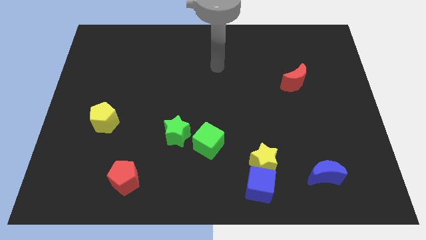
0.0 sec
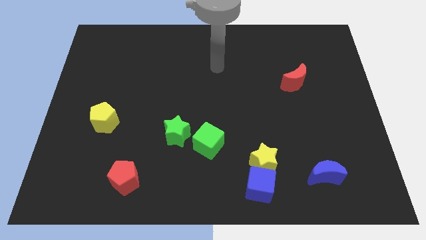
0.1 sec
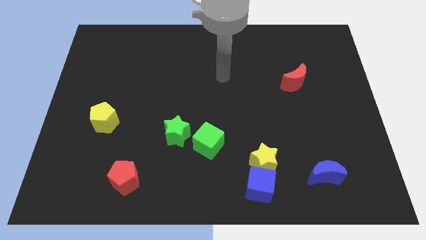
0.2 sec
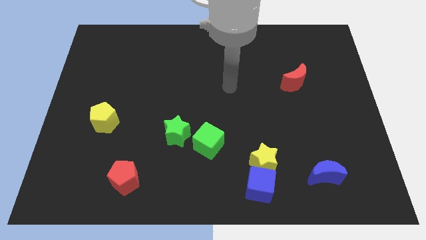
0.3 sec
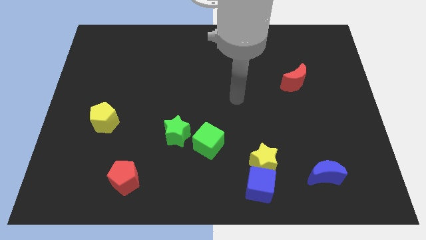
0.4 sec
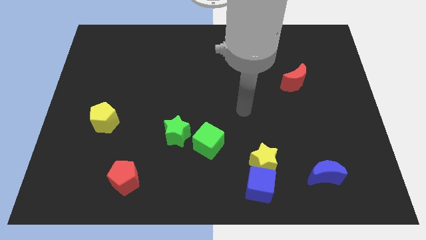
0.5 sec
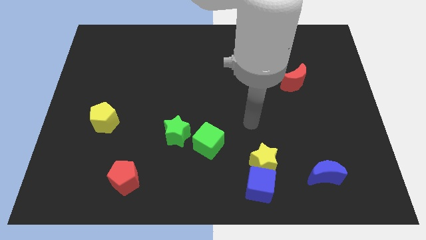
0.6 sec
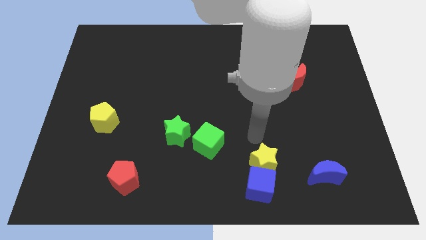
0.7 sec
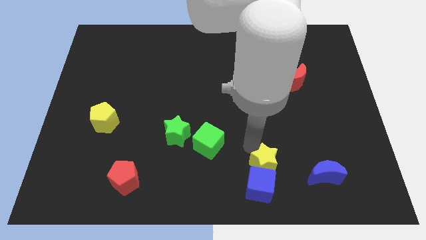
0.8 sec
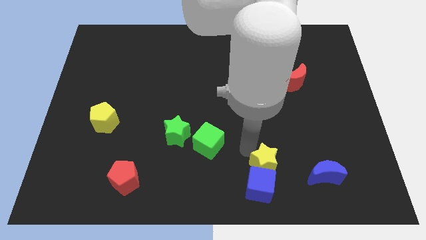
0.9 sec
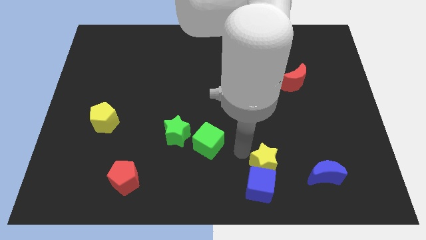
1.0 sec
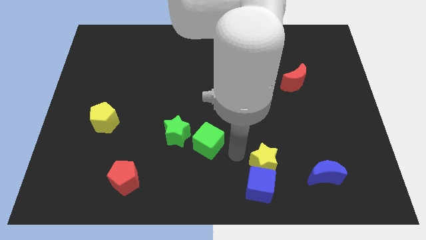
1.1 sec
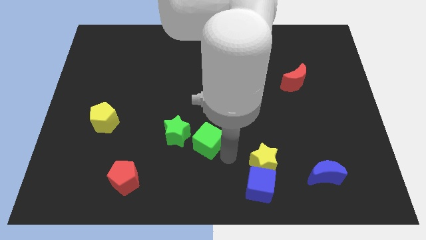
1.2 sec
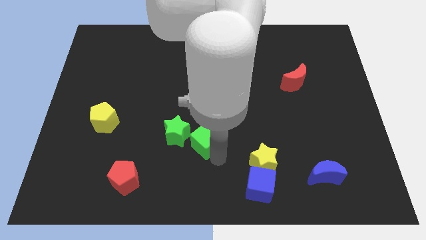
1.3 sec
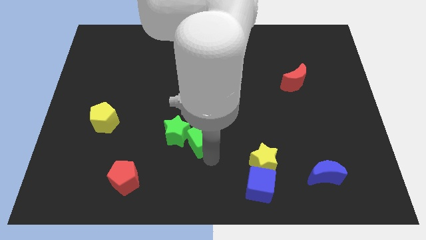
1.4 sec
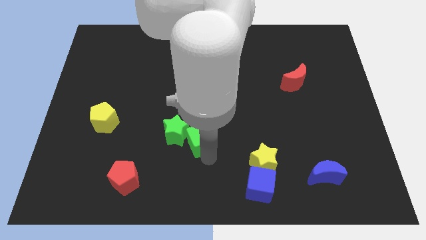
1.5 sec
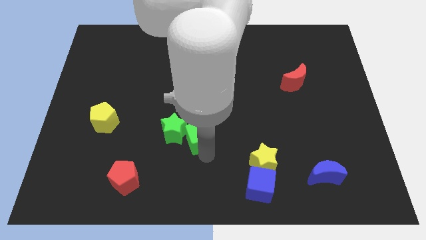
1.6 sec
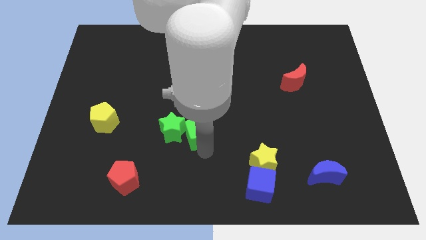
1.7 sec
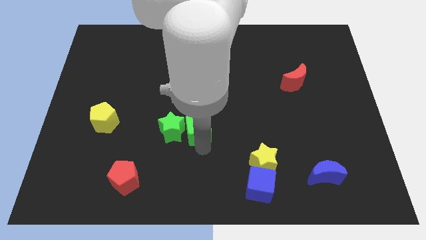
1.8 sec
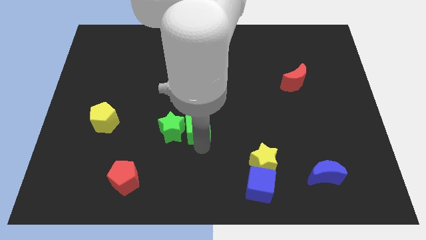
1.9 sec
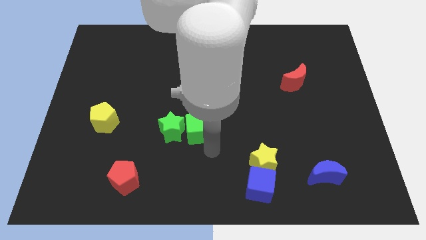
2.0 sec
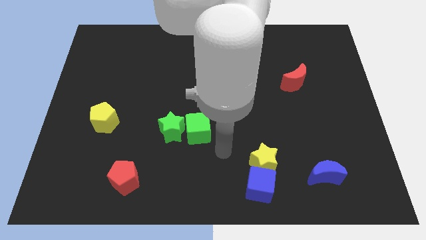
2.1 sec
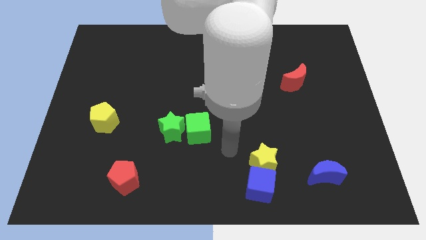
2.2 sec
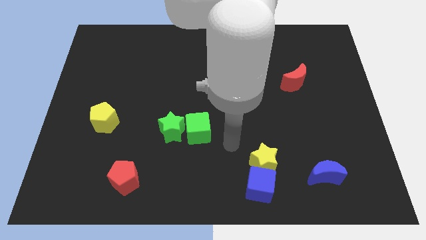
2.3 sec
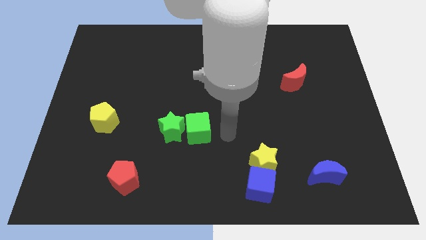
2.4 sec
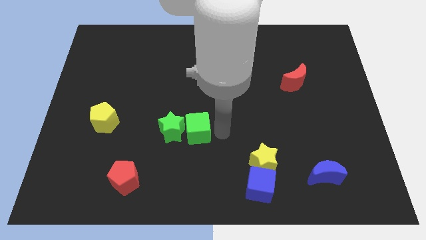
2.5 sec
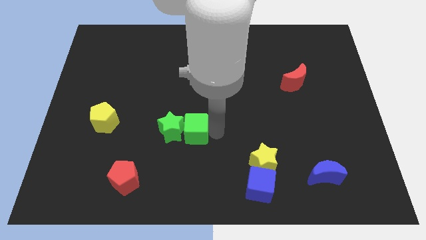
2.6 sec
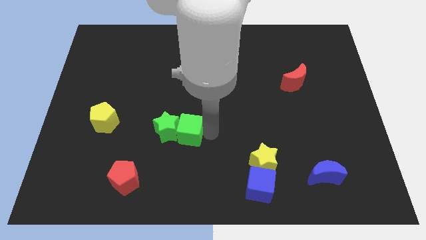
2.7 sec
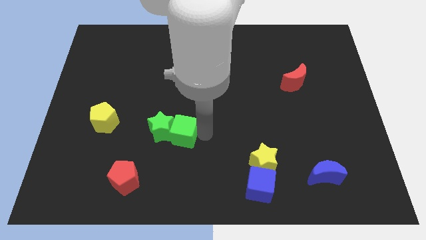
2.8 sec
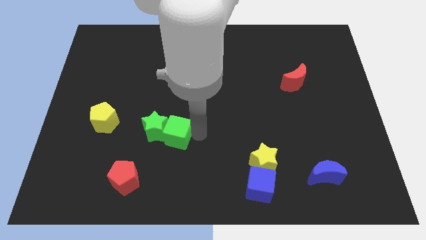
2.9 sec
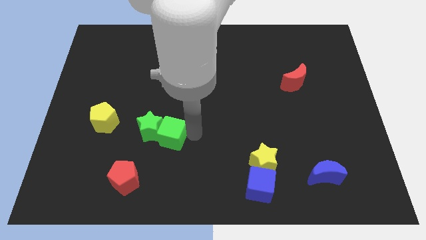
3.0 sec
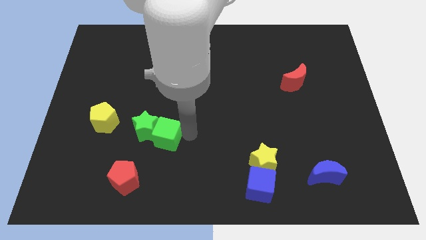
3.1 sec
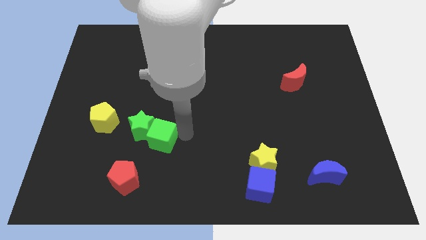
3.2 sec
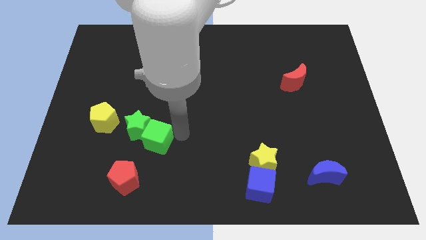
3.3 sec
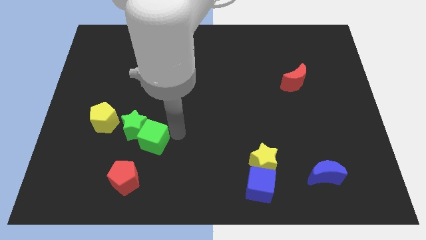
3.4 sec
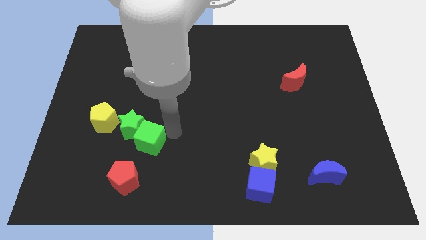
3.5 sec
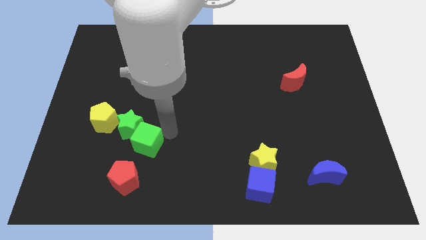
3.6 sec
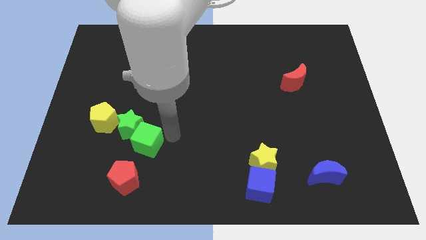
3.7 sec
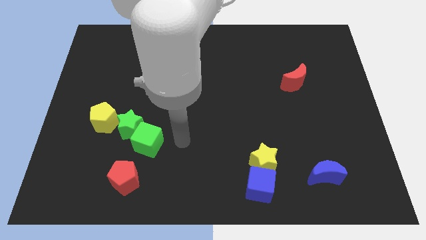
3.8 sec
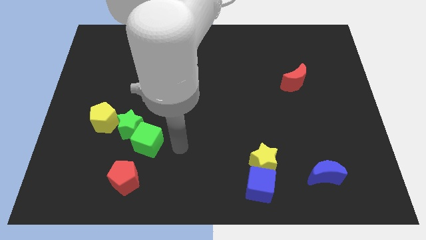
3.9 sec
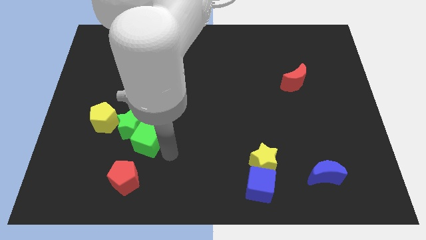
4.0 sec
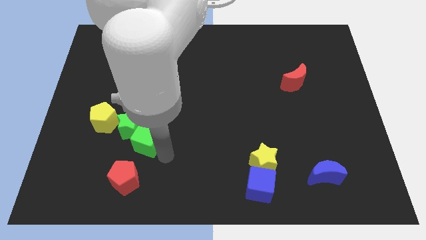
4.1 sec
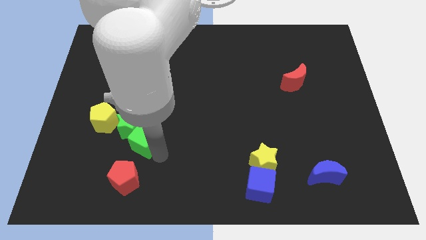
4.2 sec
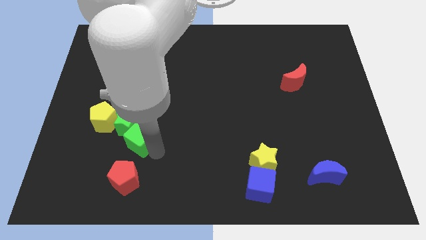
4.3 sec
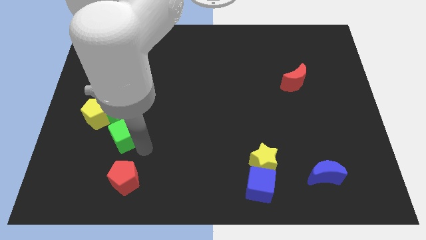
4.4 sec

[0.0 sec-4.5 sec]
move the group of the green blocks into the yellow pentagon

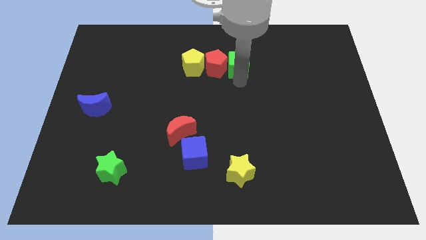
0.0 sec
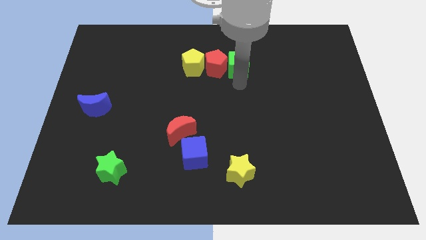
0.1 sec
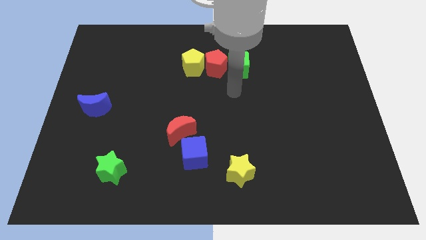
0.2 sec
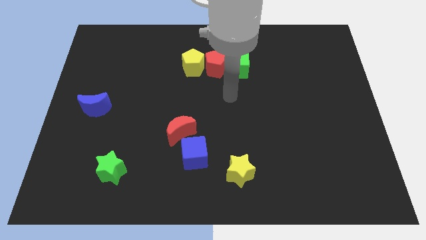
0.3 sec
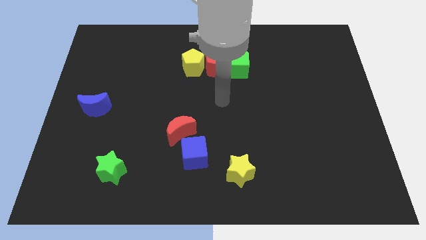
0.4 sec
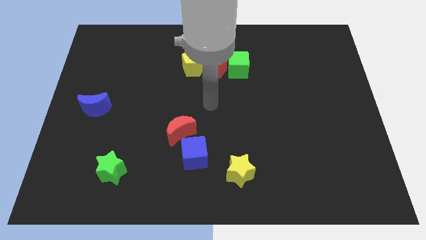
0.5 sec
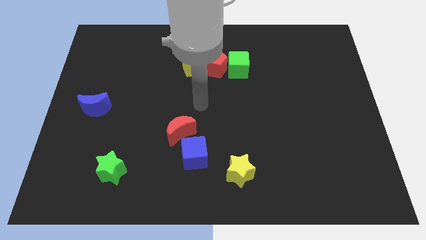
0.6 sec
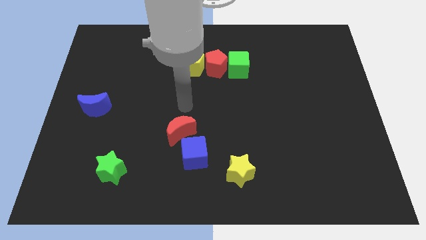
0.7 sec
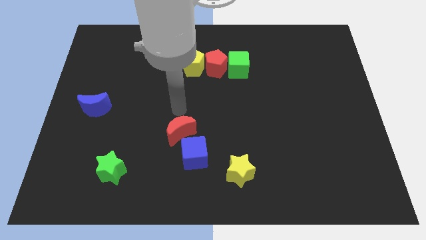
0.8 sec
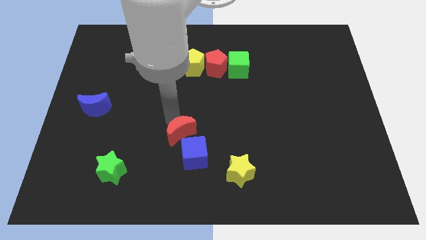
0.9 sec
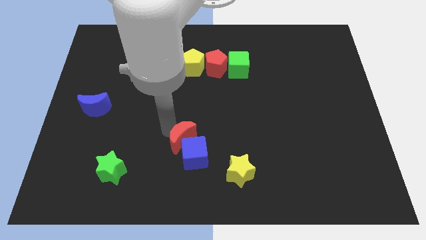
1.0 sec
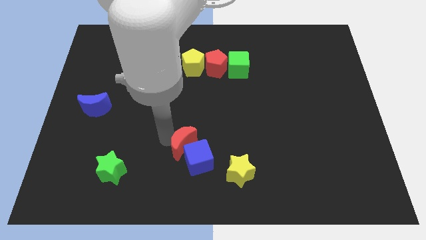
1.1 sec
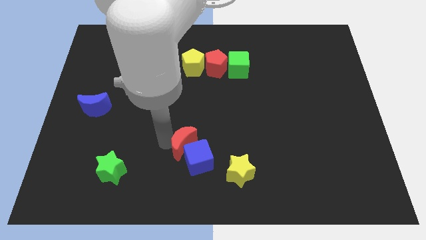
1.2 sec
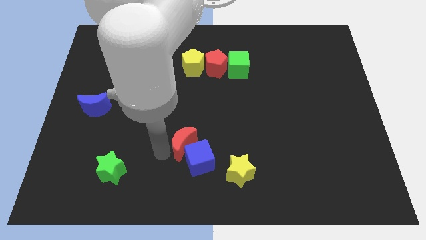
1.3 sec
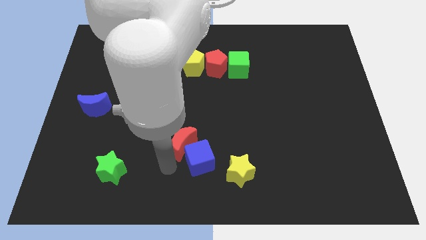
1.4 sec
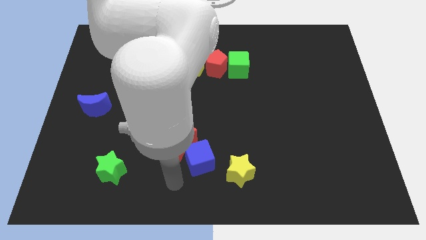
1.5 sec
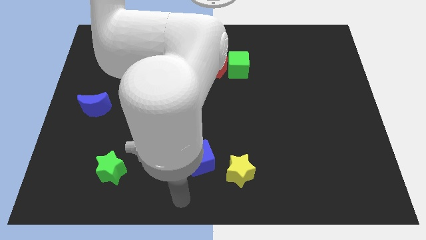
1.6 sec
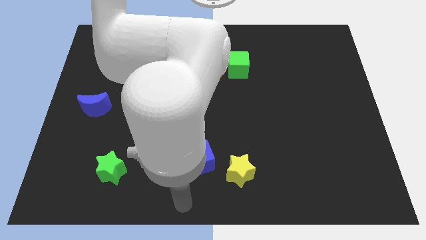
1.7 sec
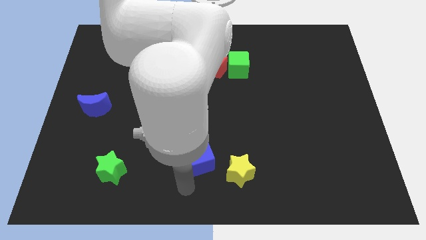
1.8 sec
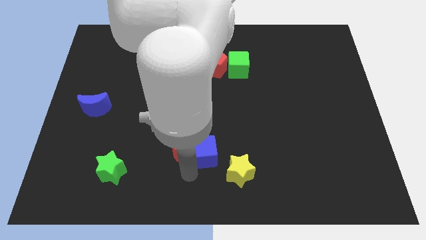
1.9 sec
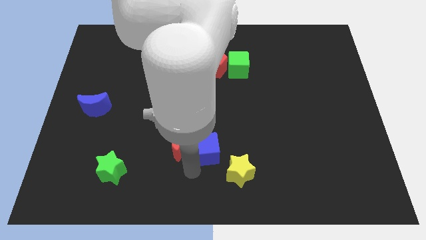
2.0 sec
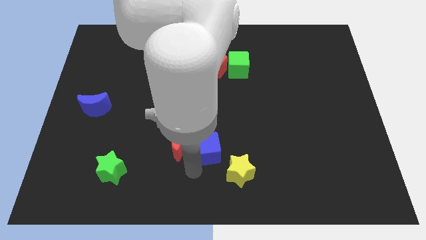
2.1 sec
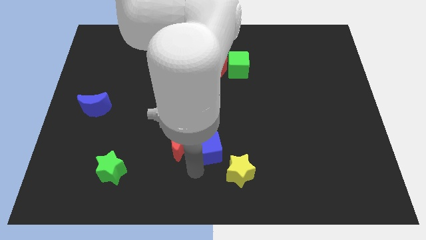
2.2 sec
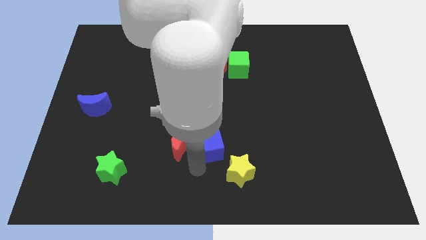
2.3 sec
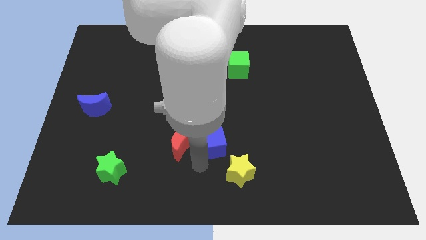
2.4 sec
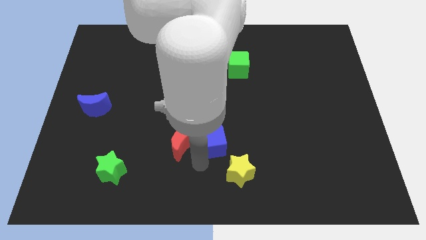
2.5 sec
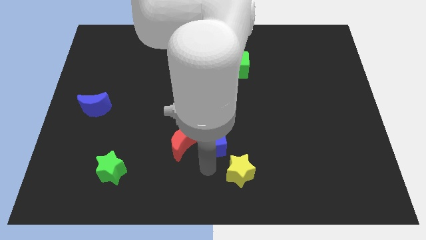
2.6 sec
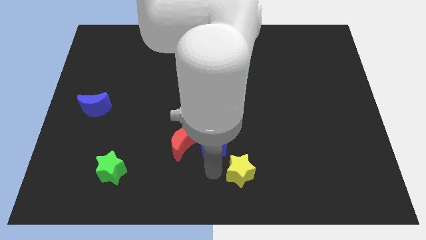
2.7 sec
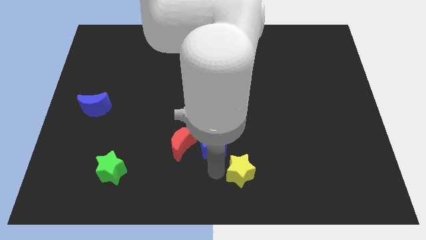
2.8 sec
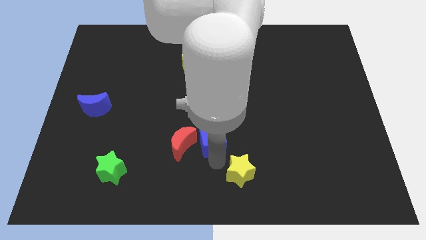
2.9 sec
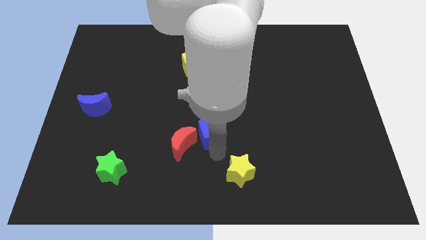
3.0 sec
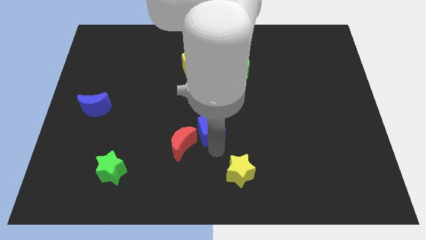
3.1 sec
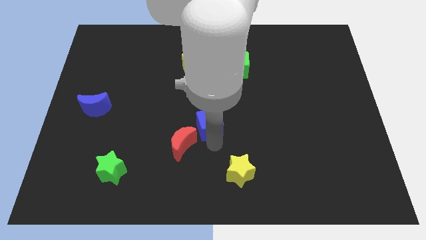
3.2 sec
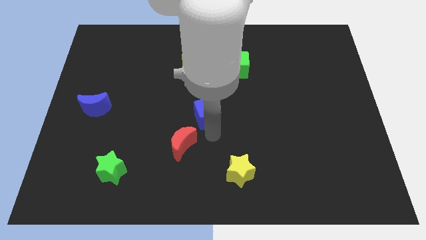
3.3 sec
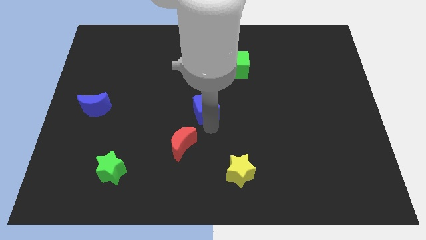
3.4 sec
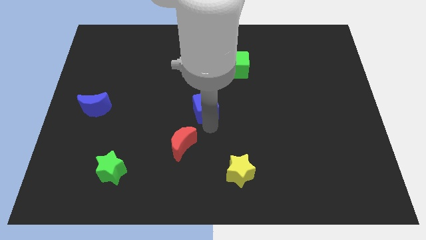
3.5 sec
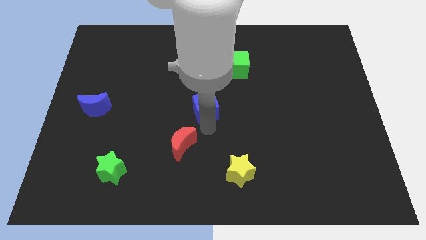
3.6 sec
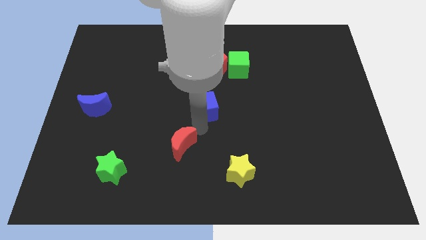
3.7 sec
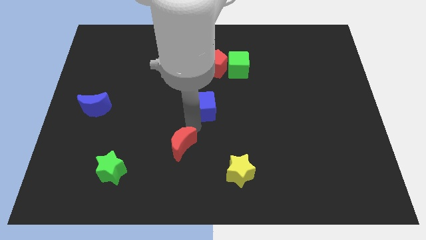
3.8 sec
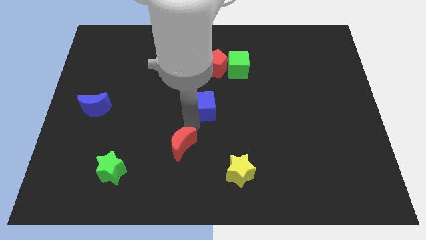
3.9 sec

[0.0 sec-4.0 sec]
put the blue cube vertically below the red pentagon

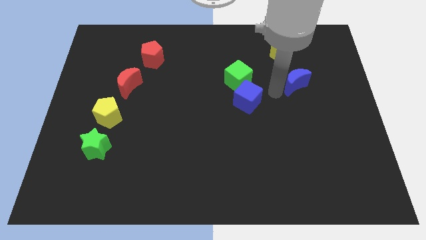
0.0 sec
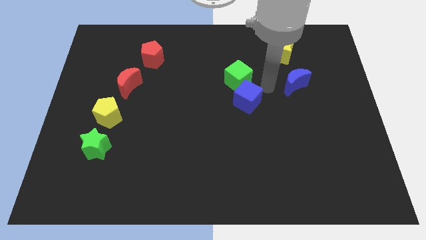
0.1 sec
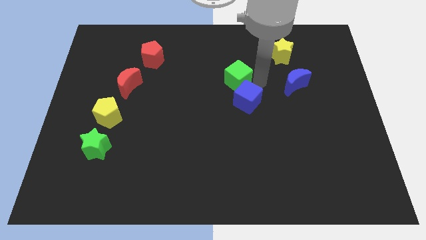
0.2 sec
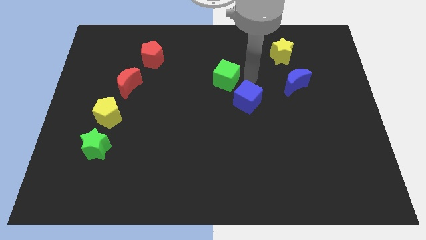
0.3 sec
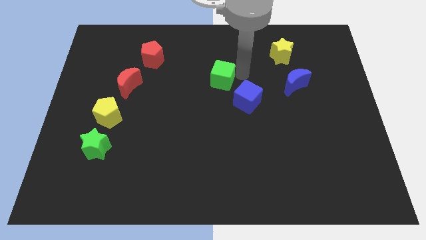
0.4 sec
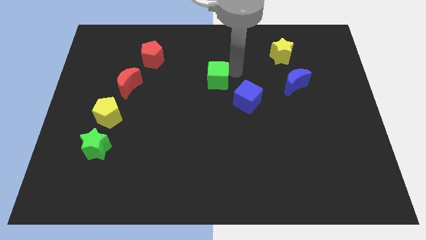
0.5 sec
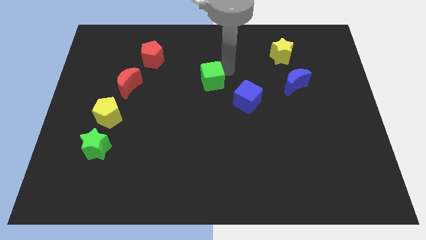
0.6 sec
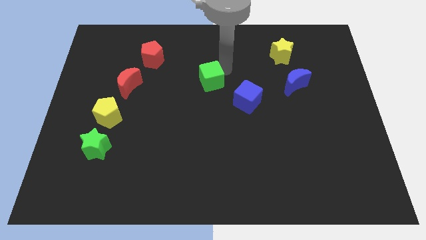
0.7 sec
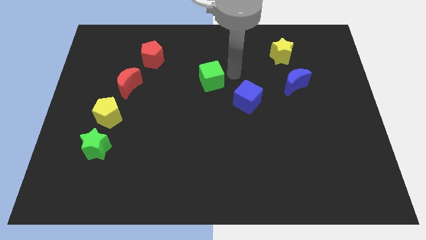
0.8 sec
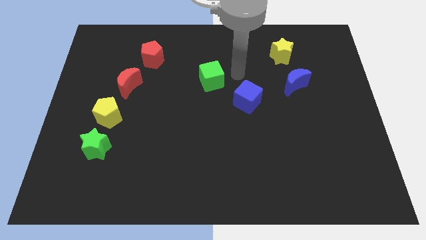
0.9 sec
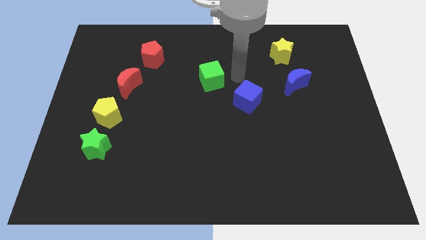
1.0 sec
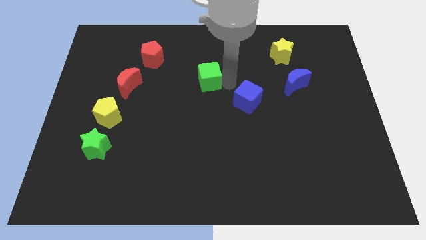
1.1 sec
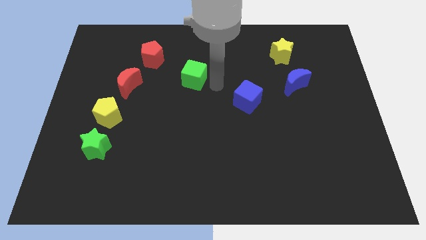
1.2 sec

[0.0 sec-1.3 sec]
push the green cube slightly to the left
